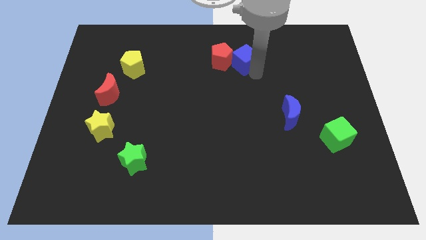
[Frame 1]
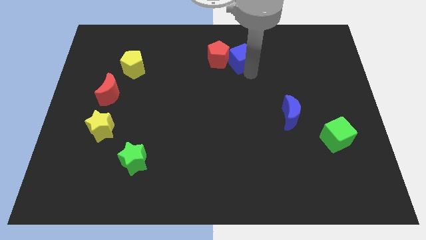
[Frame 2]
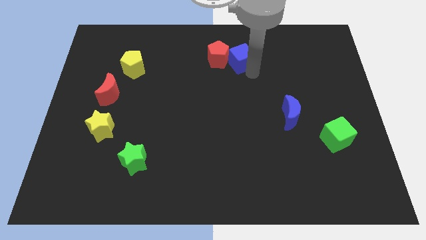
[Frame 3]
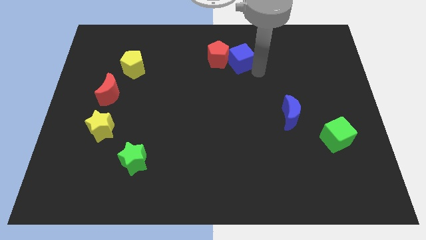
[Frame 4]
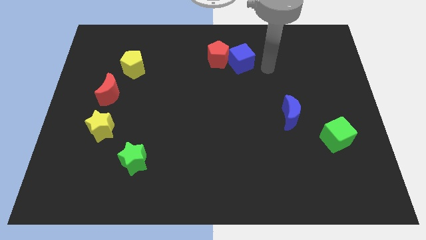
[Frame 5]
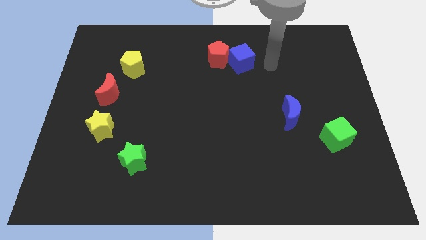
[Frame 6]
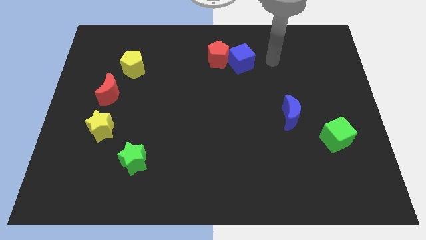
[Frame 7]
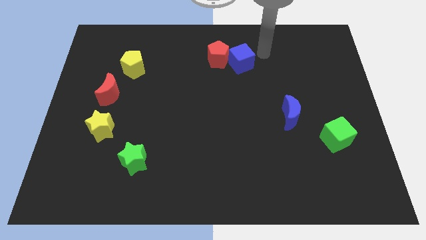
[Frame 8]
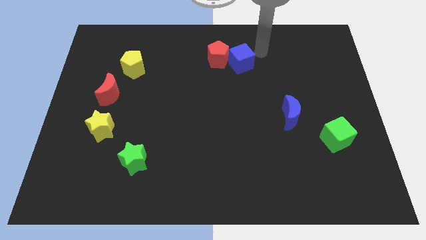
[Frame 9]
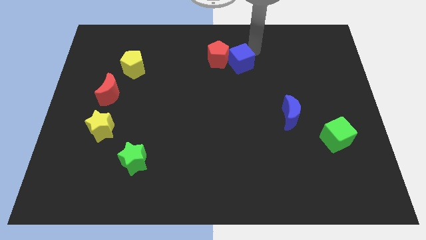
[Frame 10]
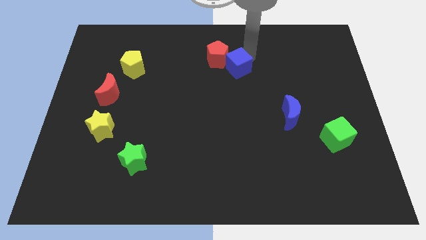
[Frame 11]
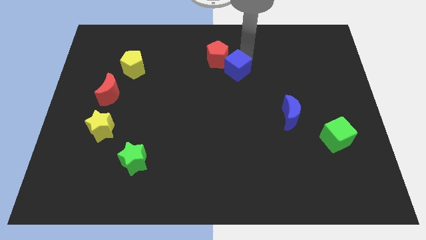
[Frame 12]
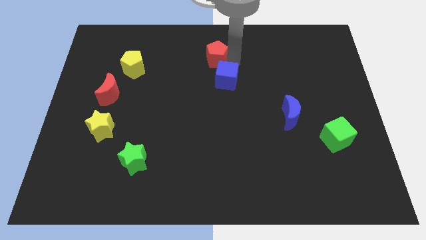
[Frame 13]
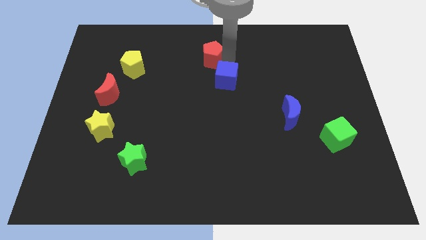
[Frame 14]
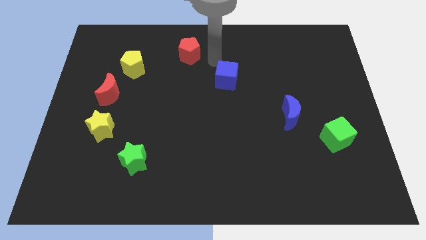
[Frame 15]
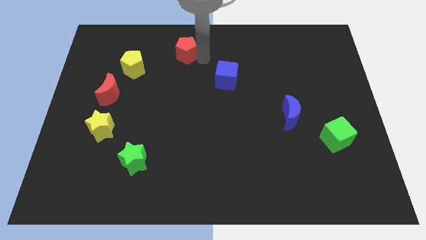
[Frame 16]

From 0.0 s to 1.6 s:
separate the red pentagon and blue cube

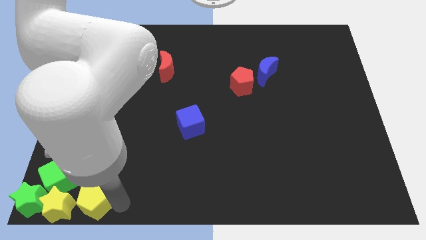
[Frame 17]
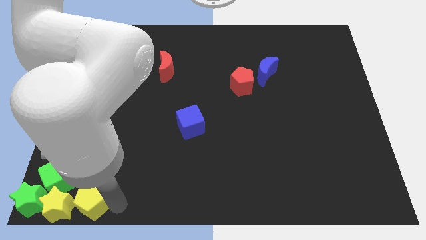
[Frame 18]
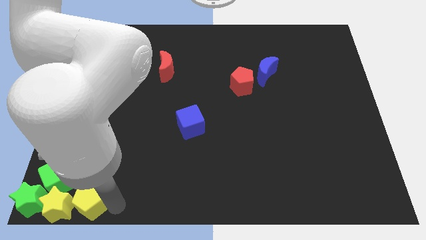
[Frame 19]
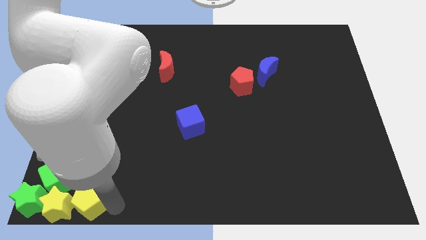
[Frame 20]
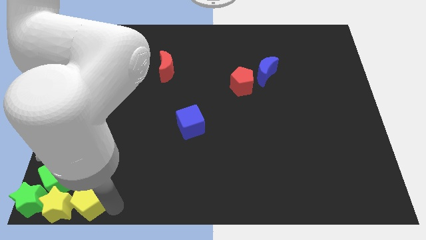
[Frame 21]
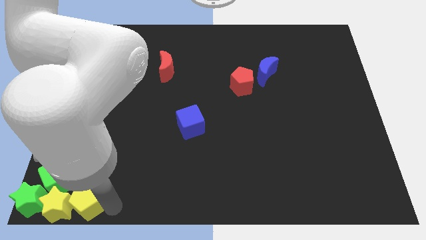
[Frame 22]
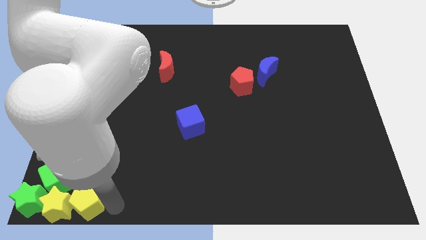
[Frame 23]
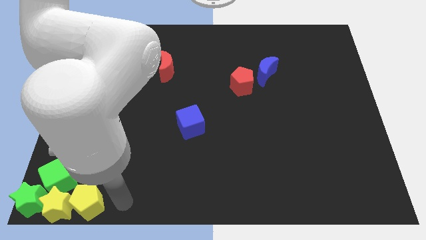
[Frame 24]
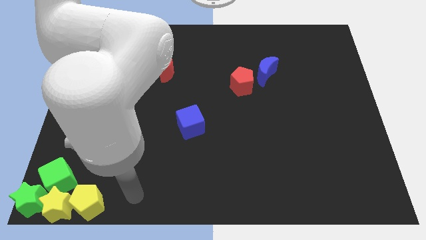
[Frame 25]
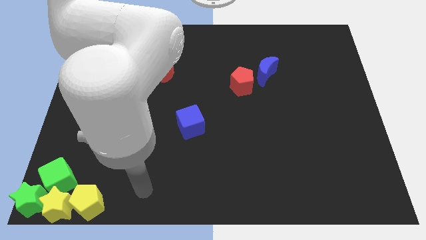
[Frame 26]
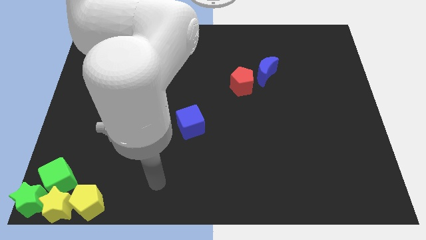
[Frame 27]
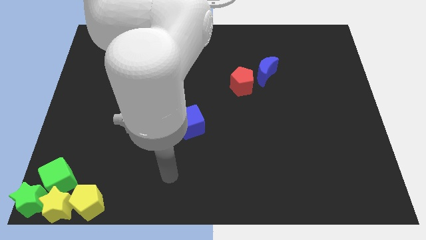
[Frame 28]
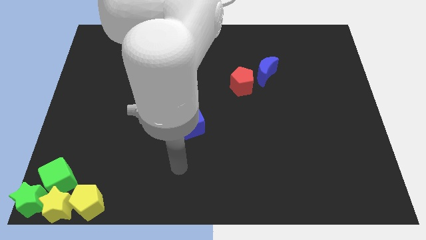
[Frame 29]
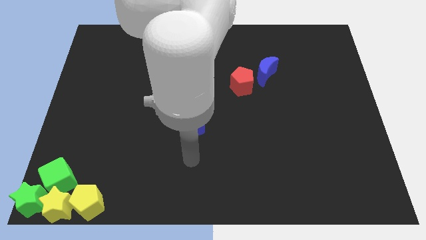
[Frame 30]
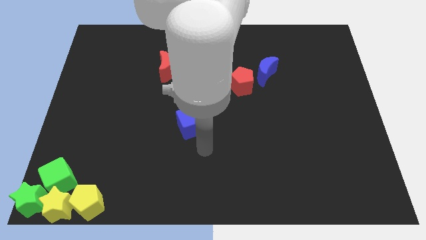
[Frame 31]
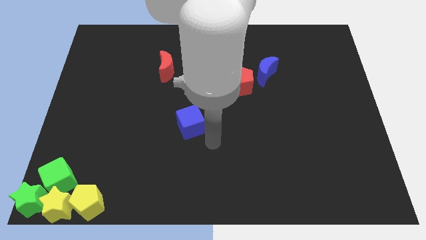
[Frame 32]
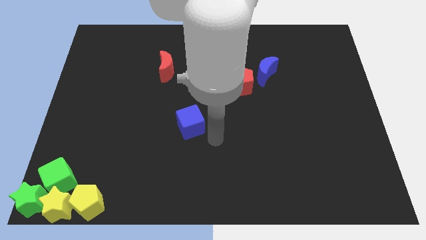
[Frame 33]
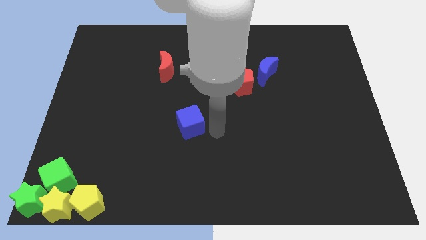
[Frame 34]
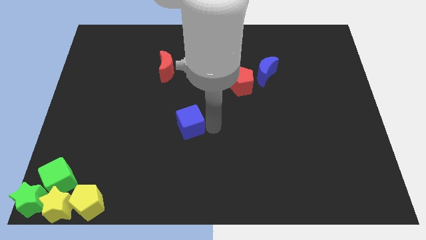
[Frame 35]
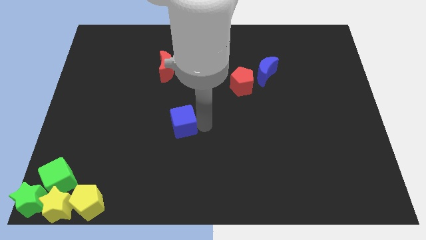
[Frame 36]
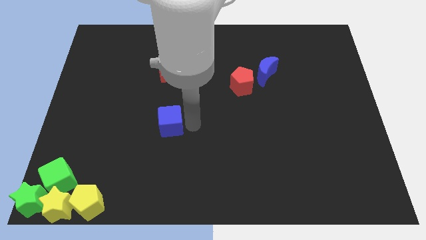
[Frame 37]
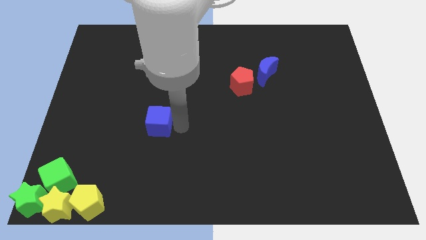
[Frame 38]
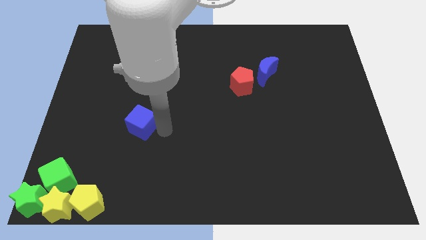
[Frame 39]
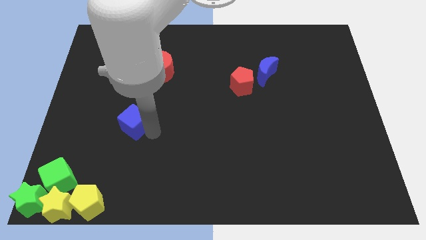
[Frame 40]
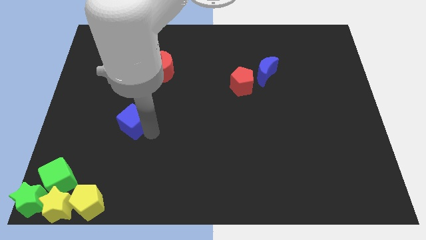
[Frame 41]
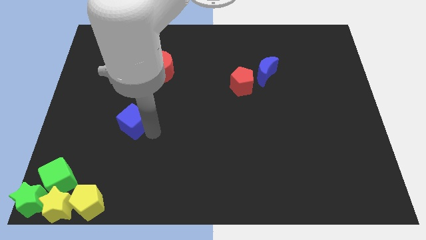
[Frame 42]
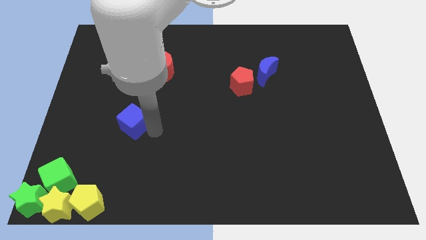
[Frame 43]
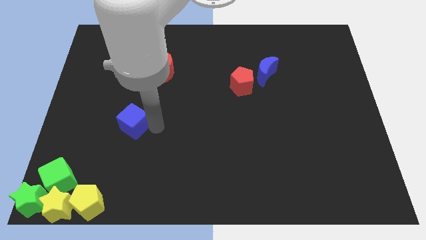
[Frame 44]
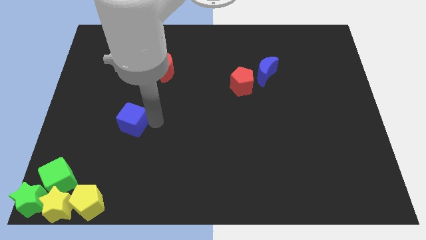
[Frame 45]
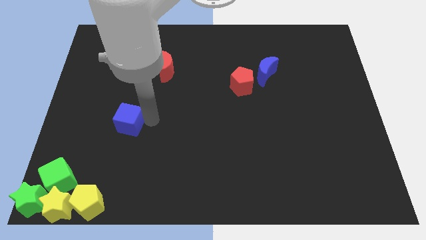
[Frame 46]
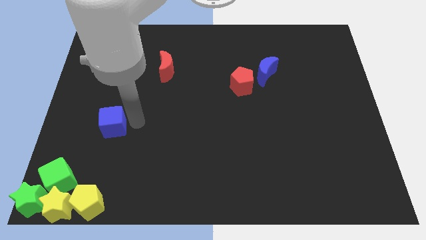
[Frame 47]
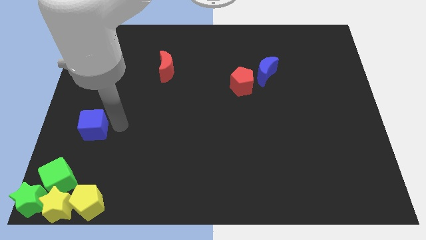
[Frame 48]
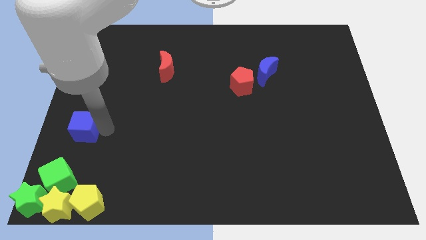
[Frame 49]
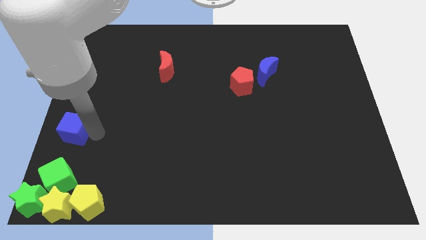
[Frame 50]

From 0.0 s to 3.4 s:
place the blue cube above the green cube

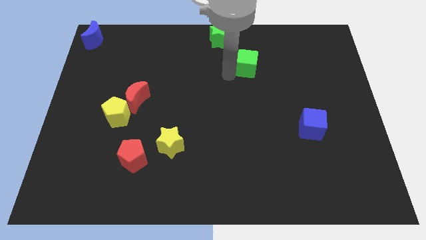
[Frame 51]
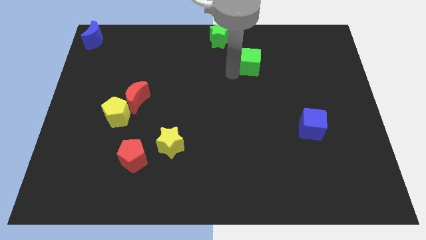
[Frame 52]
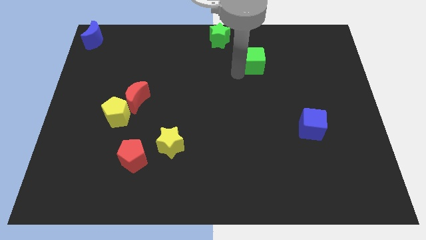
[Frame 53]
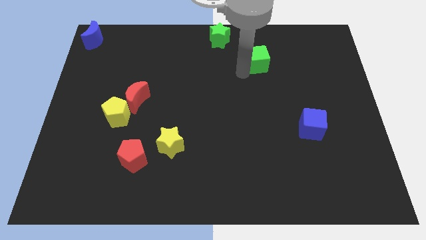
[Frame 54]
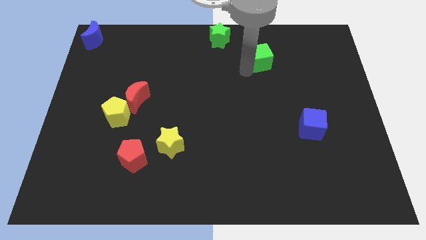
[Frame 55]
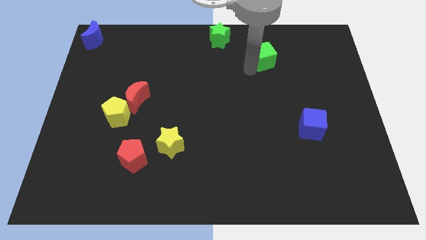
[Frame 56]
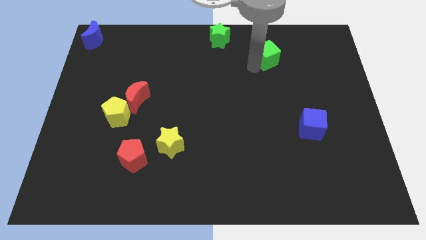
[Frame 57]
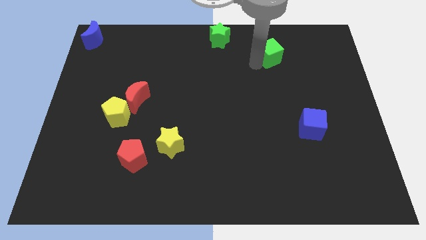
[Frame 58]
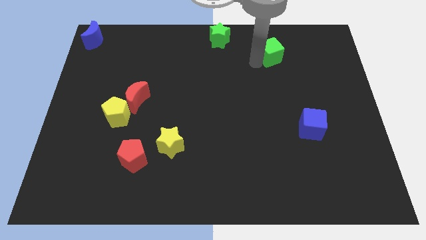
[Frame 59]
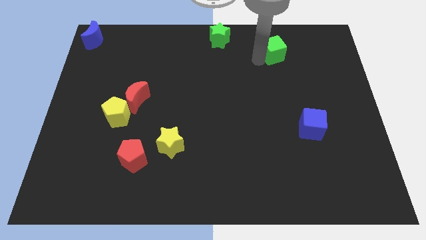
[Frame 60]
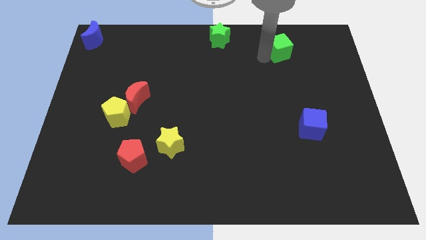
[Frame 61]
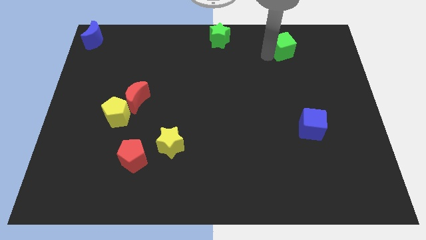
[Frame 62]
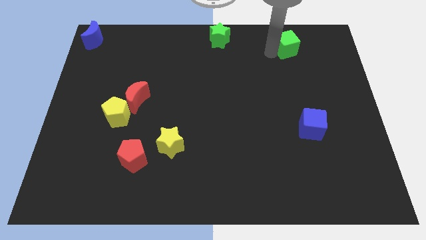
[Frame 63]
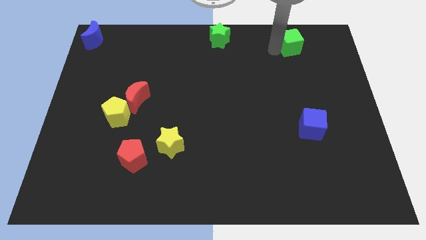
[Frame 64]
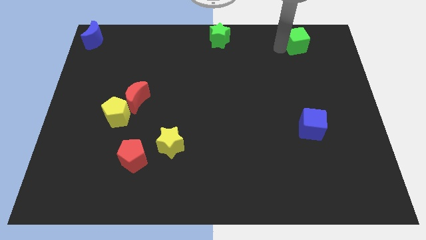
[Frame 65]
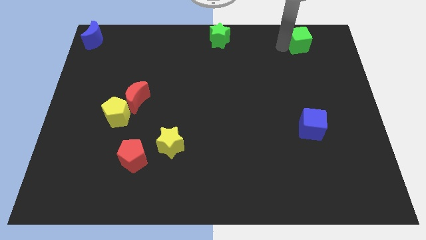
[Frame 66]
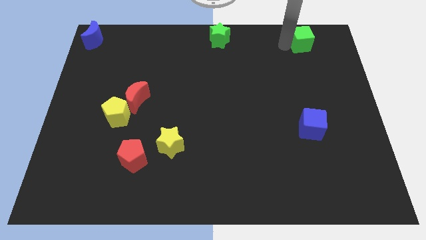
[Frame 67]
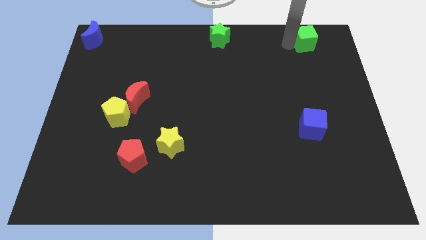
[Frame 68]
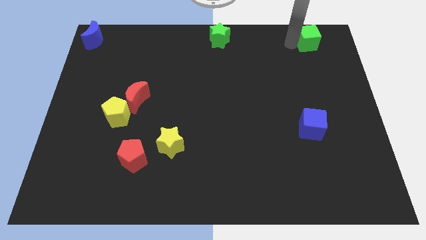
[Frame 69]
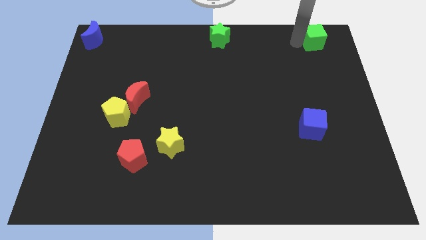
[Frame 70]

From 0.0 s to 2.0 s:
push the green cube towards the top right of the board

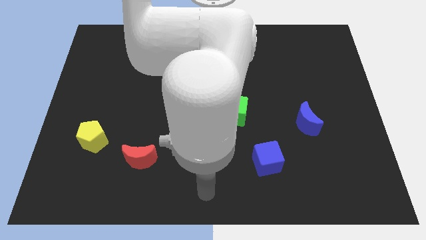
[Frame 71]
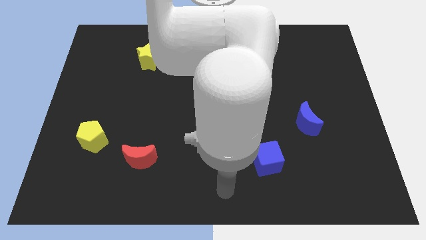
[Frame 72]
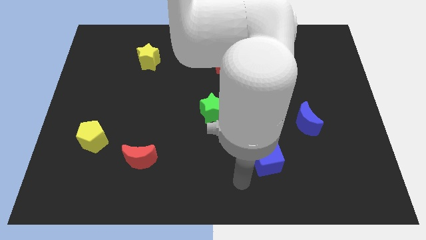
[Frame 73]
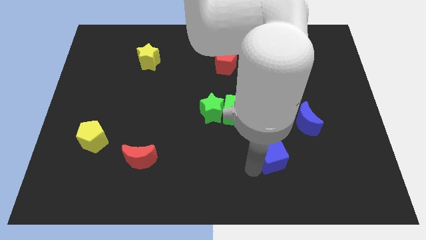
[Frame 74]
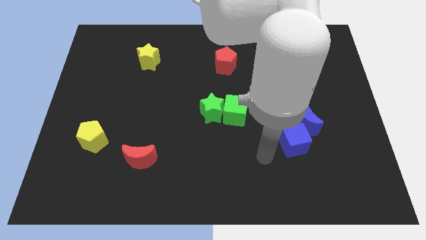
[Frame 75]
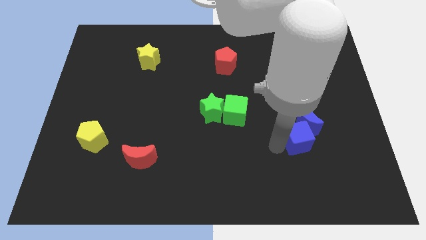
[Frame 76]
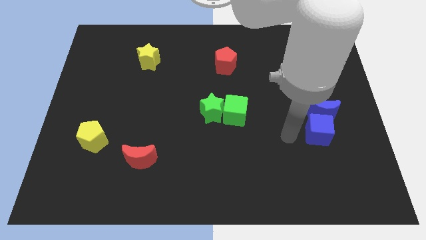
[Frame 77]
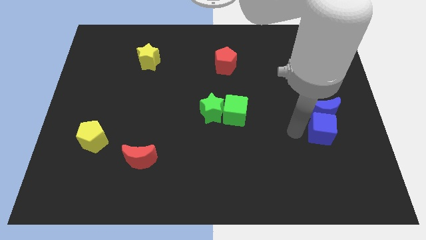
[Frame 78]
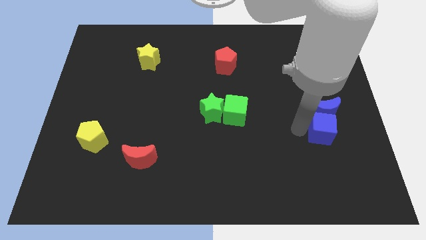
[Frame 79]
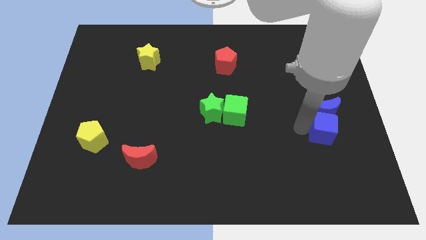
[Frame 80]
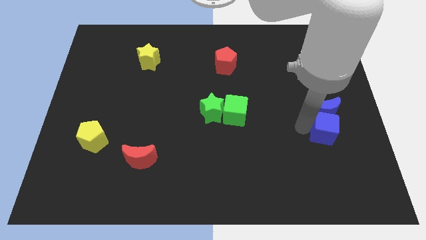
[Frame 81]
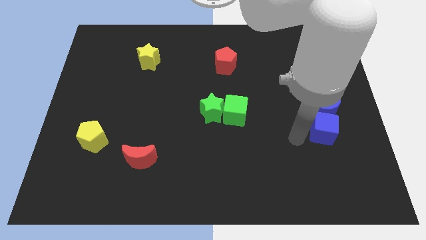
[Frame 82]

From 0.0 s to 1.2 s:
put both the blue blocks to the center right of the board

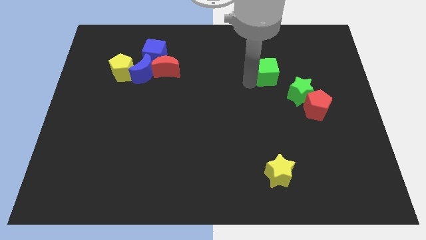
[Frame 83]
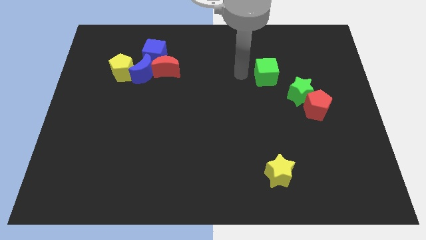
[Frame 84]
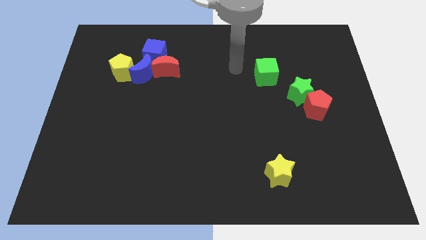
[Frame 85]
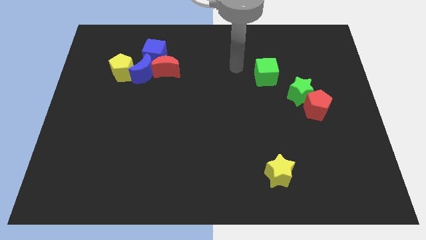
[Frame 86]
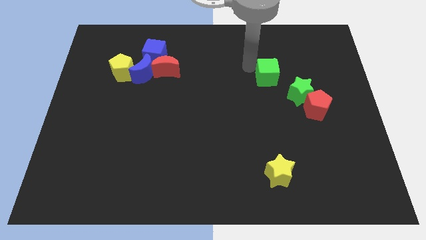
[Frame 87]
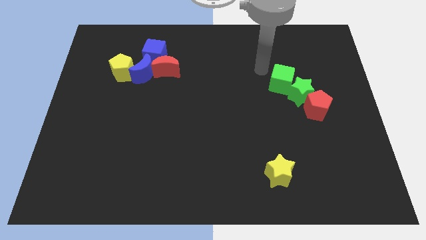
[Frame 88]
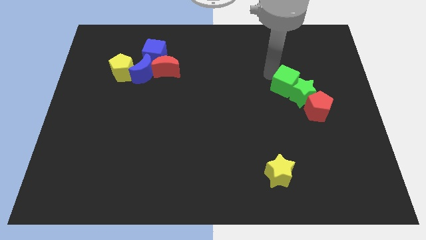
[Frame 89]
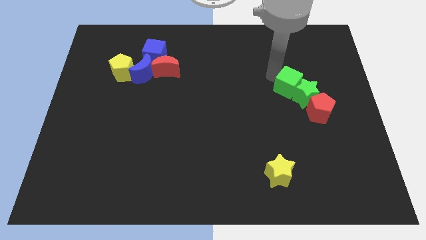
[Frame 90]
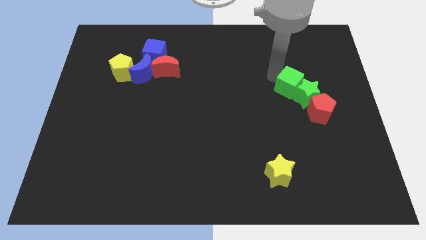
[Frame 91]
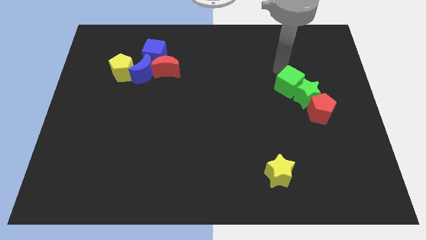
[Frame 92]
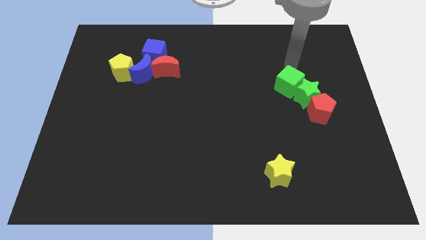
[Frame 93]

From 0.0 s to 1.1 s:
move the green cube near to the green star
